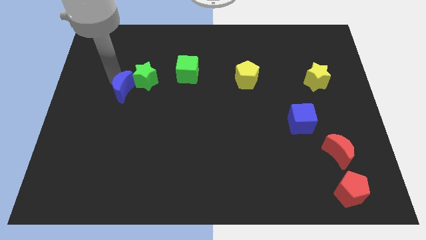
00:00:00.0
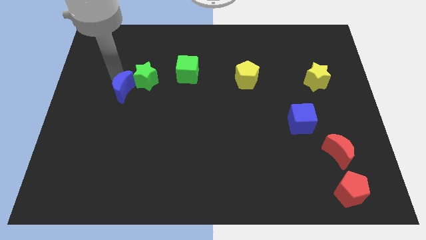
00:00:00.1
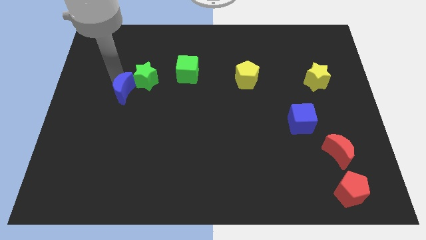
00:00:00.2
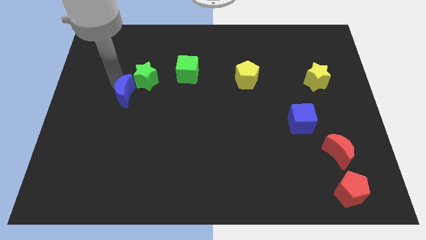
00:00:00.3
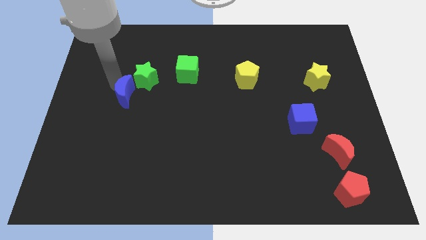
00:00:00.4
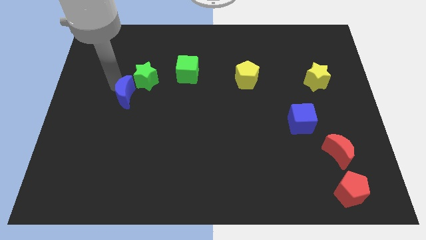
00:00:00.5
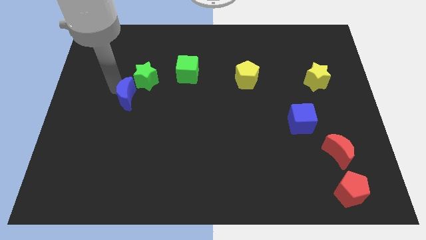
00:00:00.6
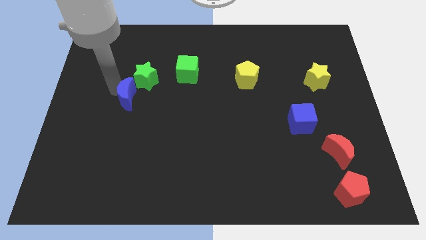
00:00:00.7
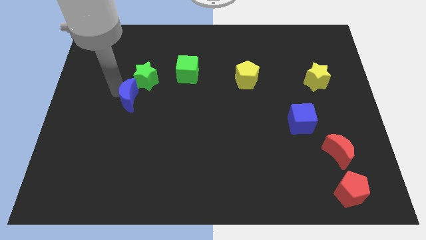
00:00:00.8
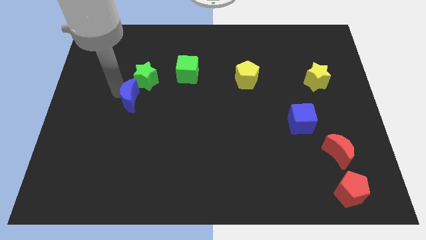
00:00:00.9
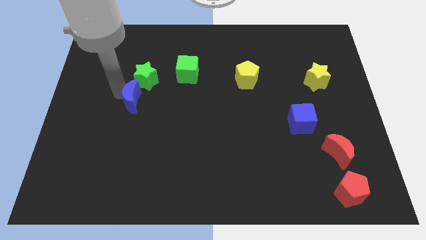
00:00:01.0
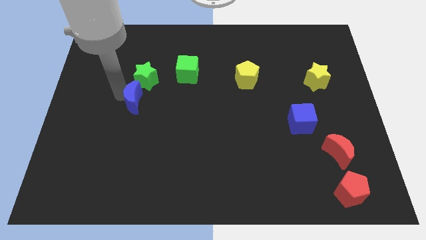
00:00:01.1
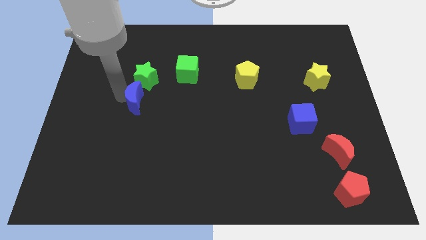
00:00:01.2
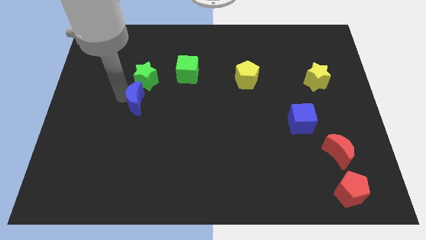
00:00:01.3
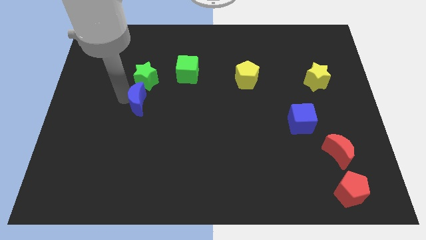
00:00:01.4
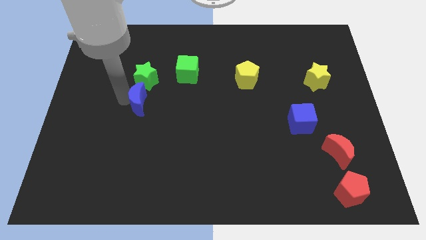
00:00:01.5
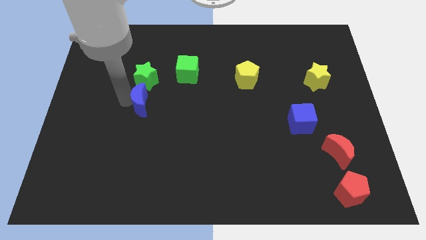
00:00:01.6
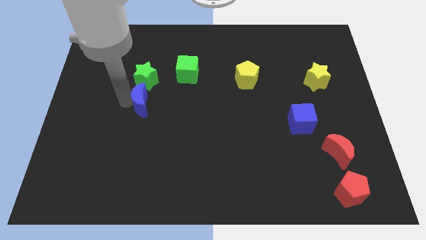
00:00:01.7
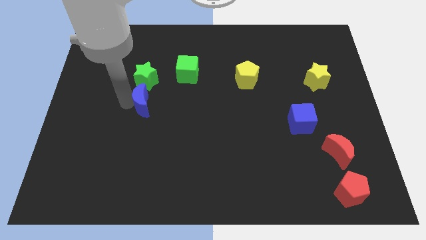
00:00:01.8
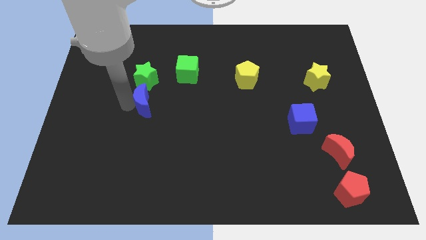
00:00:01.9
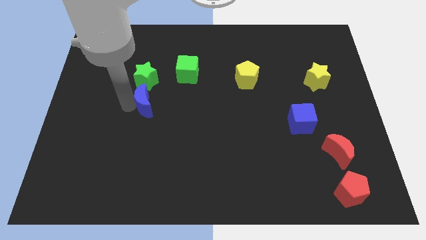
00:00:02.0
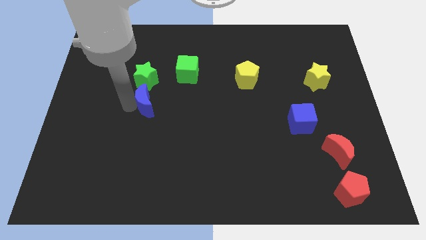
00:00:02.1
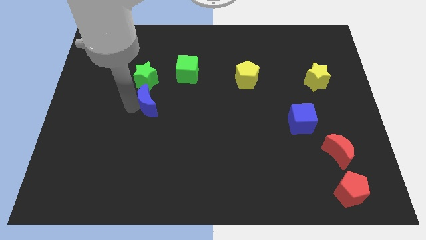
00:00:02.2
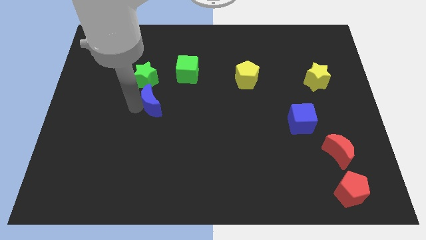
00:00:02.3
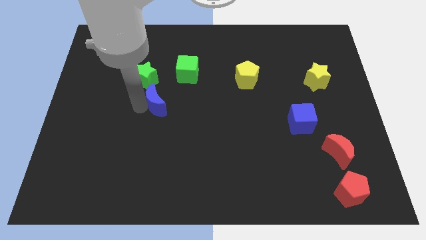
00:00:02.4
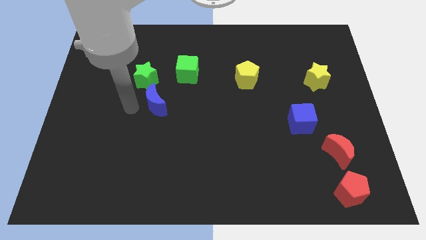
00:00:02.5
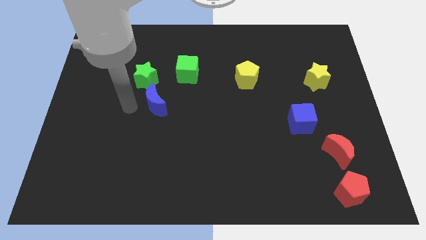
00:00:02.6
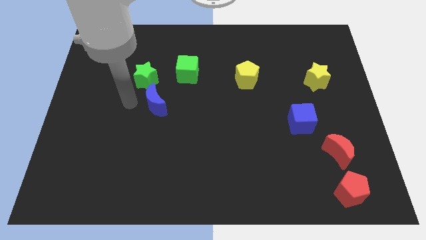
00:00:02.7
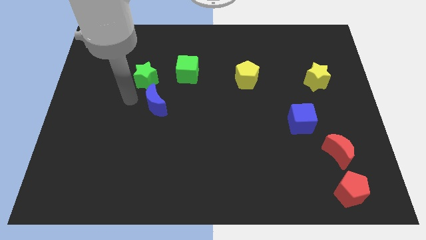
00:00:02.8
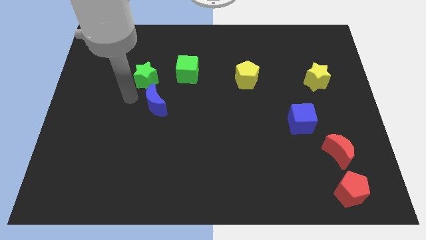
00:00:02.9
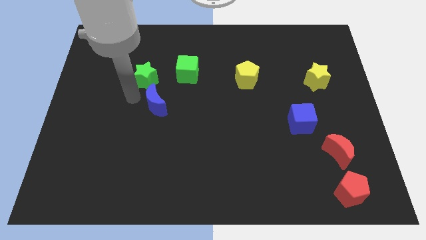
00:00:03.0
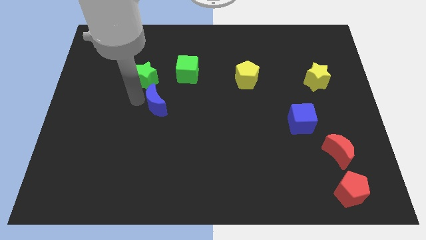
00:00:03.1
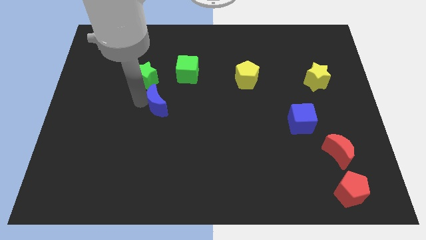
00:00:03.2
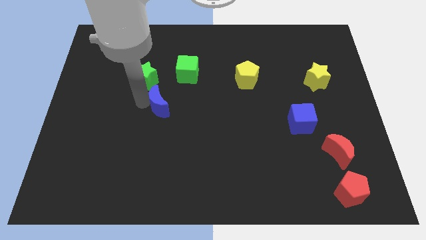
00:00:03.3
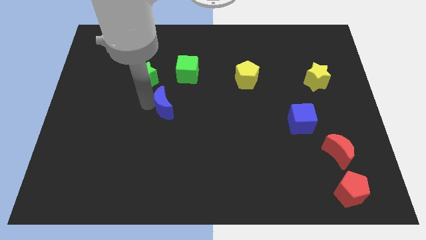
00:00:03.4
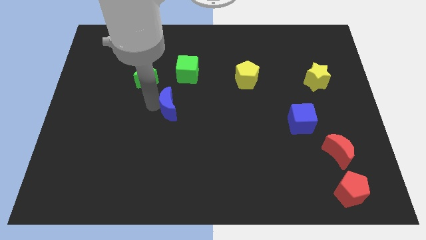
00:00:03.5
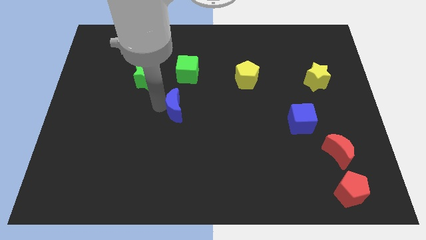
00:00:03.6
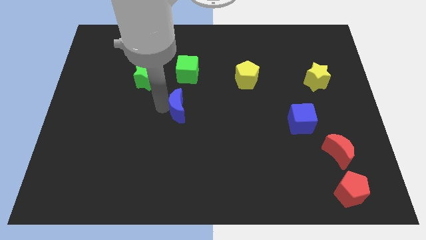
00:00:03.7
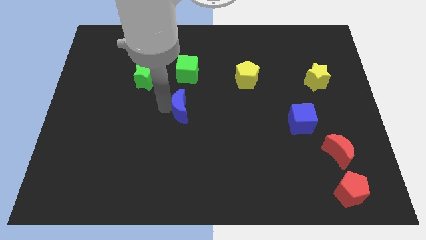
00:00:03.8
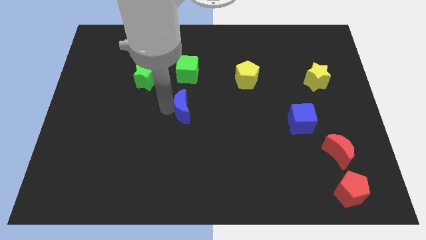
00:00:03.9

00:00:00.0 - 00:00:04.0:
move the blue moon away from the green star

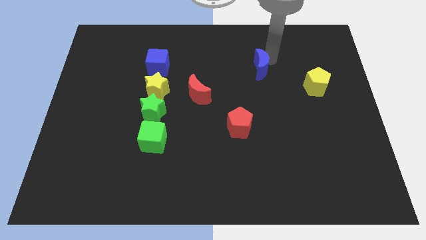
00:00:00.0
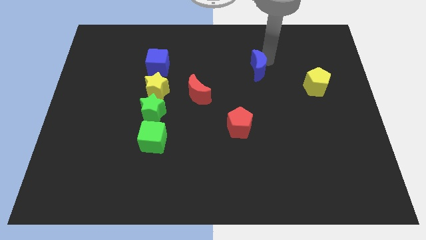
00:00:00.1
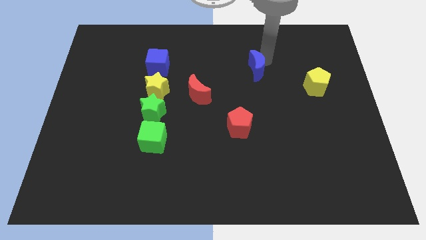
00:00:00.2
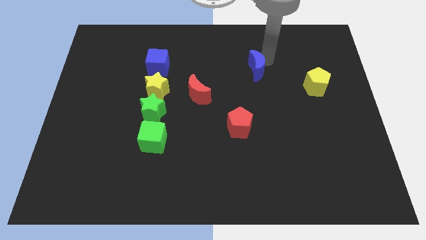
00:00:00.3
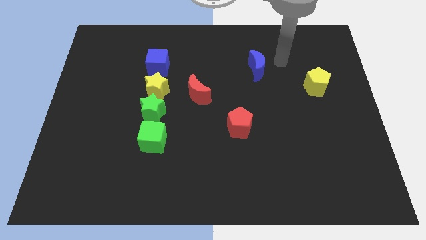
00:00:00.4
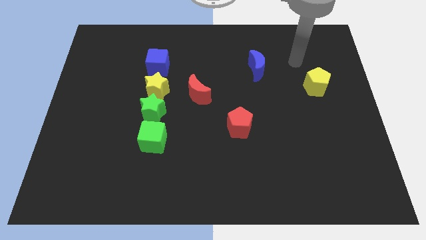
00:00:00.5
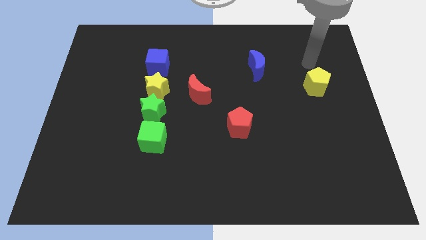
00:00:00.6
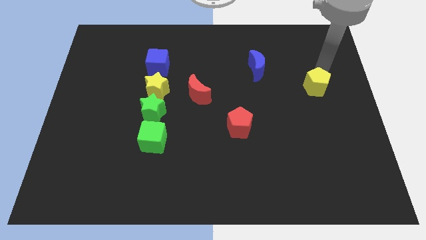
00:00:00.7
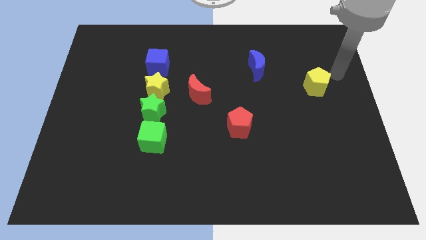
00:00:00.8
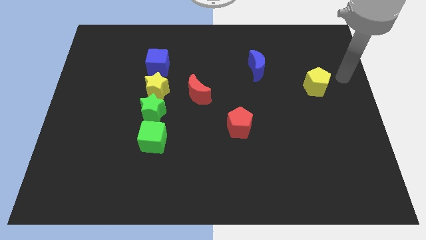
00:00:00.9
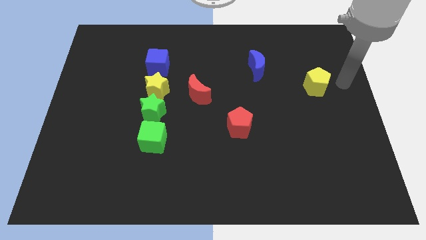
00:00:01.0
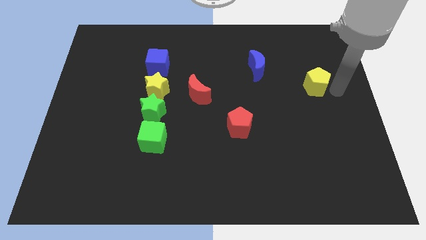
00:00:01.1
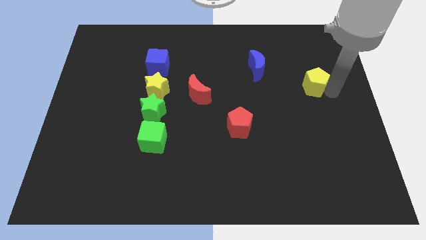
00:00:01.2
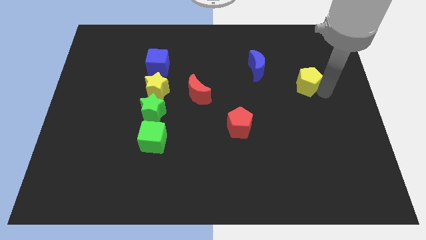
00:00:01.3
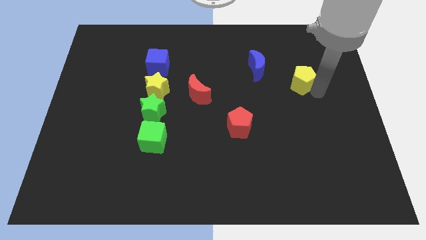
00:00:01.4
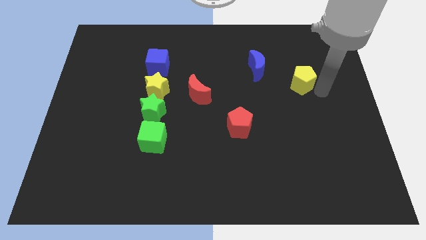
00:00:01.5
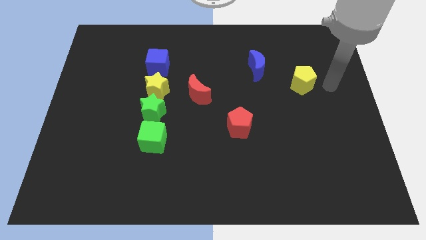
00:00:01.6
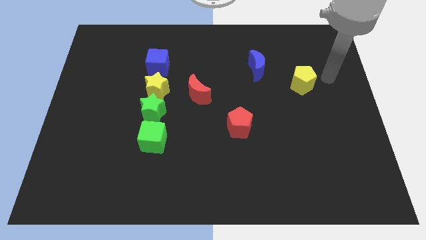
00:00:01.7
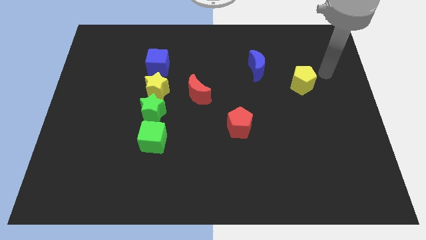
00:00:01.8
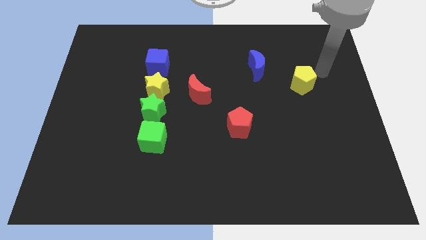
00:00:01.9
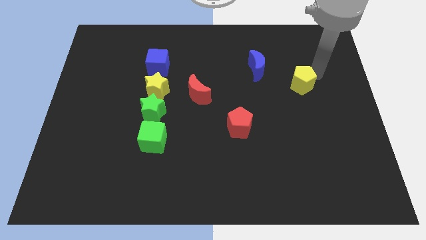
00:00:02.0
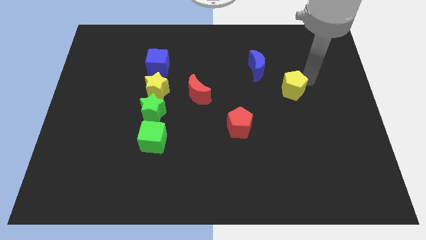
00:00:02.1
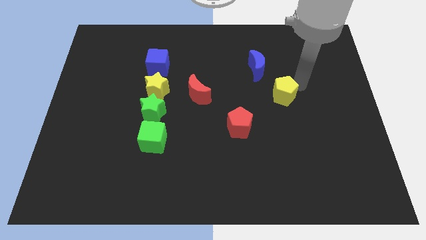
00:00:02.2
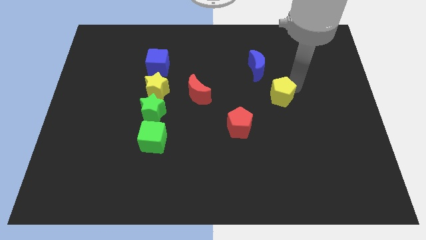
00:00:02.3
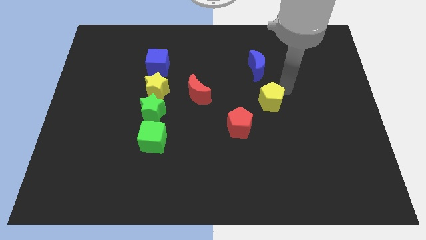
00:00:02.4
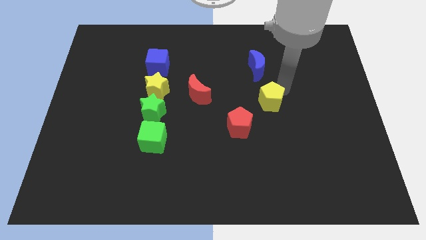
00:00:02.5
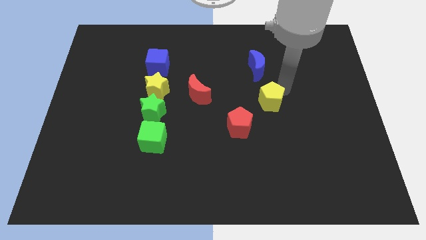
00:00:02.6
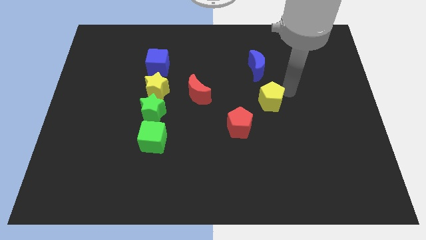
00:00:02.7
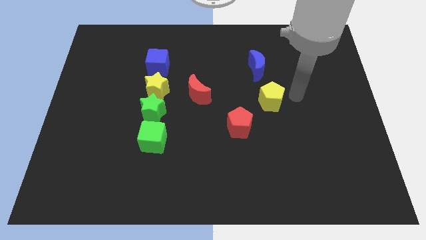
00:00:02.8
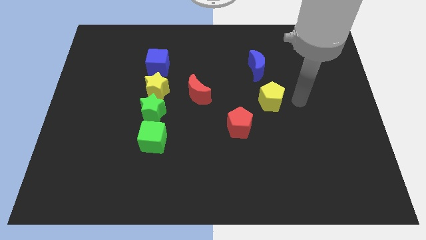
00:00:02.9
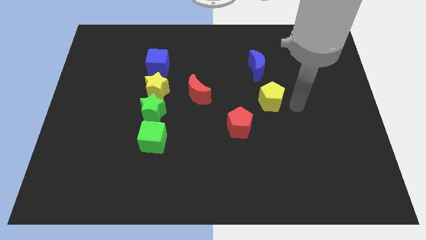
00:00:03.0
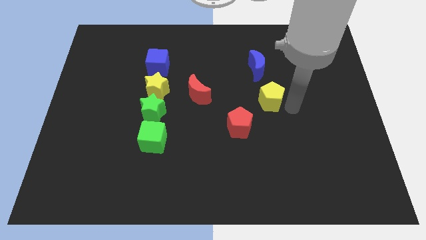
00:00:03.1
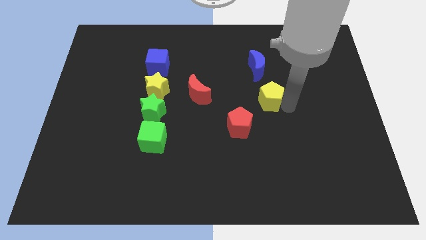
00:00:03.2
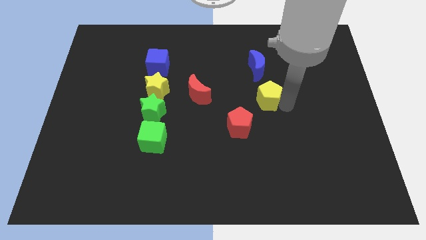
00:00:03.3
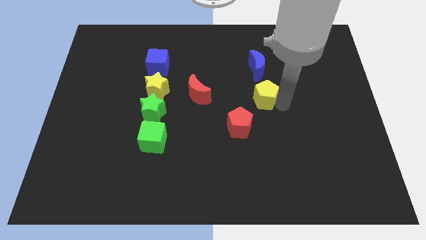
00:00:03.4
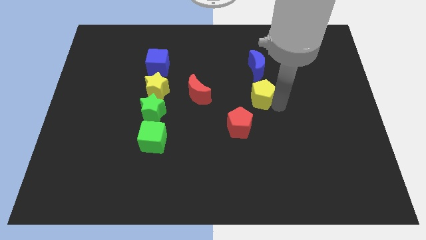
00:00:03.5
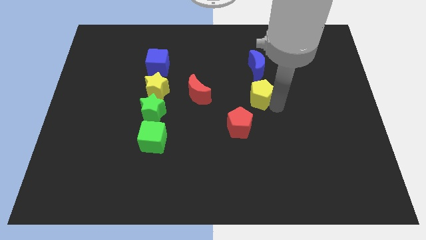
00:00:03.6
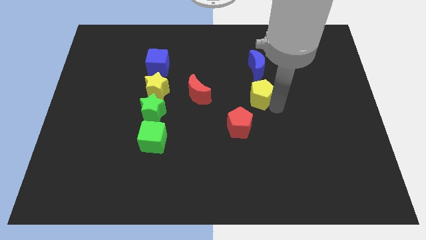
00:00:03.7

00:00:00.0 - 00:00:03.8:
place the yellow pentagon on the top right of the red pentagon

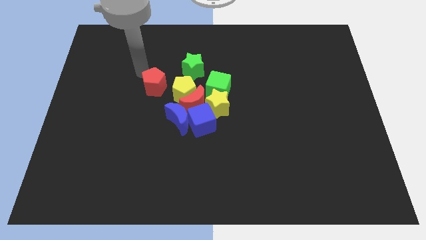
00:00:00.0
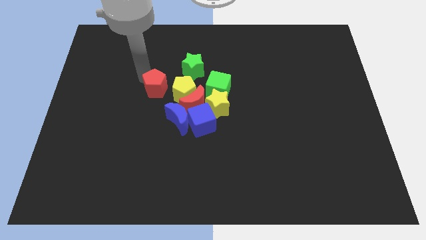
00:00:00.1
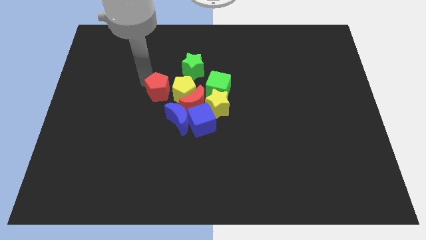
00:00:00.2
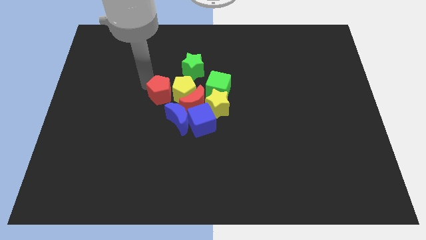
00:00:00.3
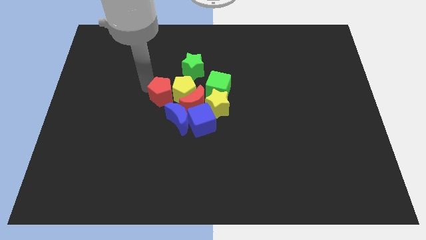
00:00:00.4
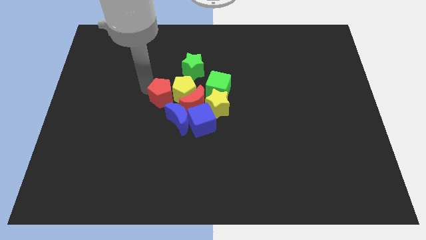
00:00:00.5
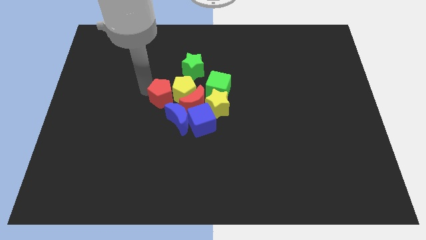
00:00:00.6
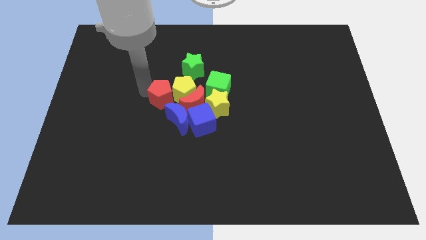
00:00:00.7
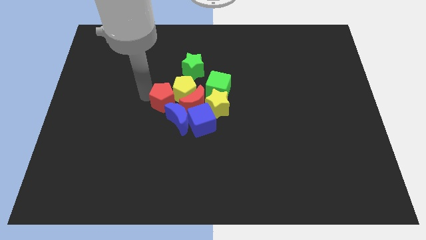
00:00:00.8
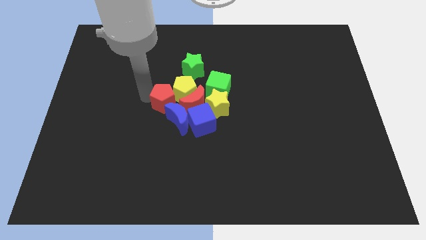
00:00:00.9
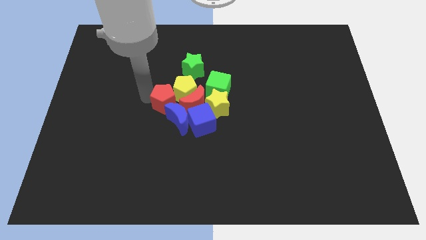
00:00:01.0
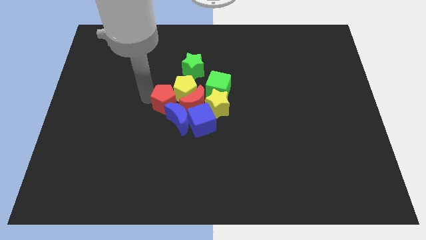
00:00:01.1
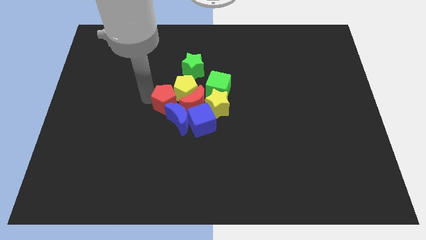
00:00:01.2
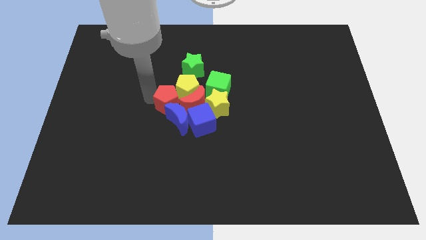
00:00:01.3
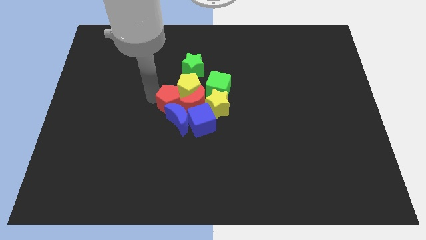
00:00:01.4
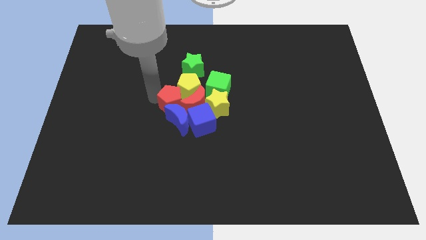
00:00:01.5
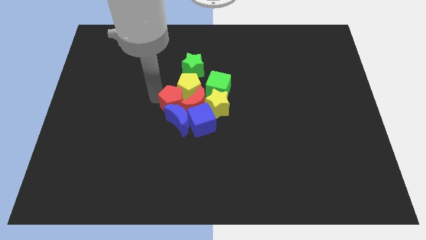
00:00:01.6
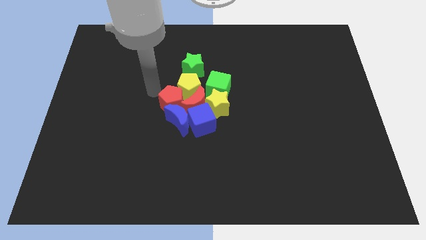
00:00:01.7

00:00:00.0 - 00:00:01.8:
slide the red pentagon into the group of blocks
